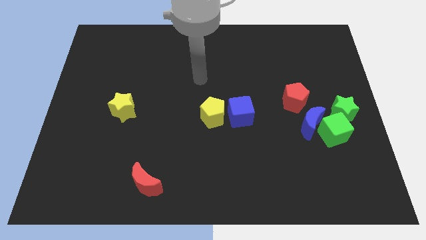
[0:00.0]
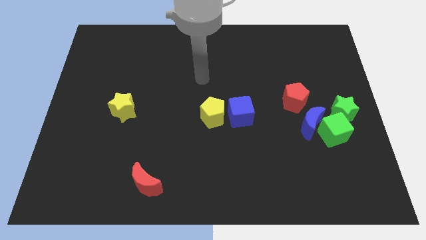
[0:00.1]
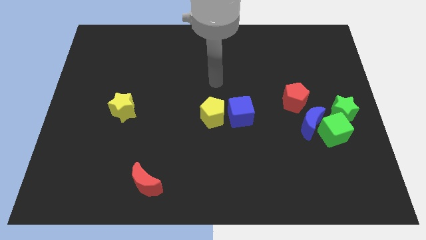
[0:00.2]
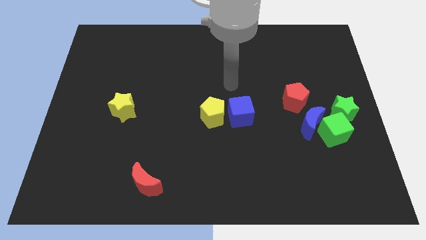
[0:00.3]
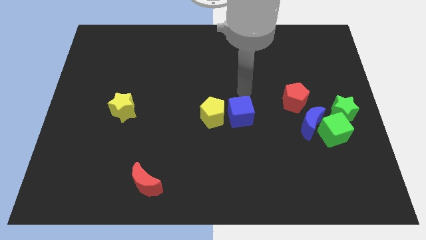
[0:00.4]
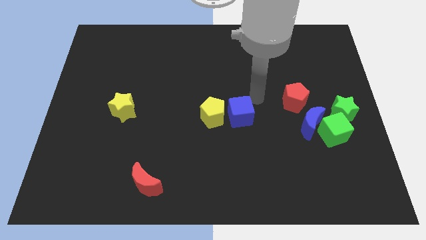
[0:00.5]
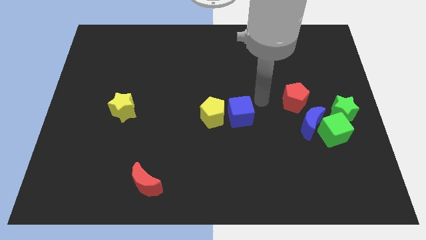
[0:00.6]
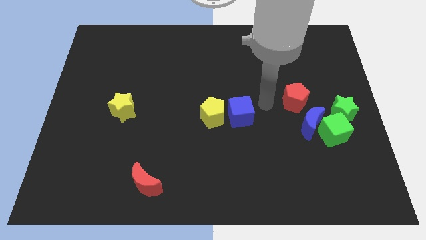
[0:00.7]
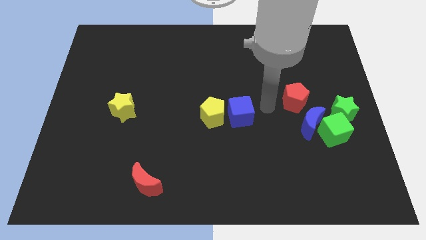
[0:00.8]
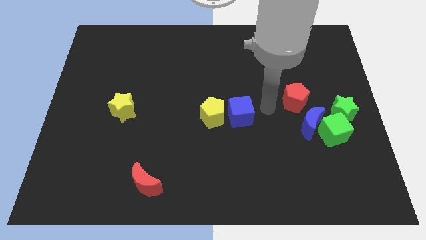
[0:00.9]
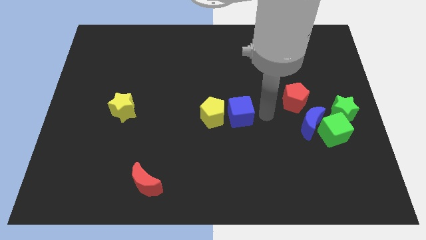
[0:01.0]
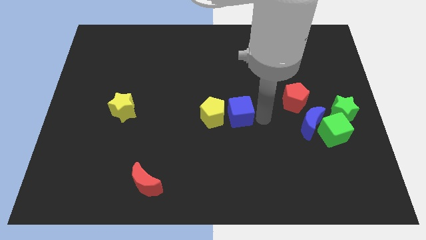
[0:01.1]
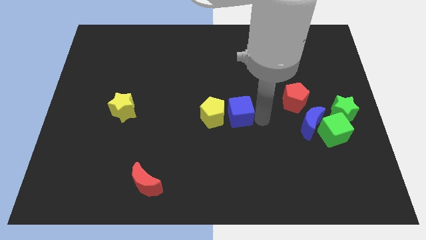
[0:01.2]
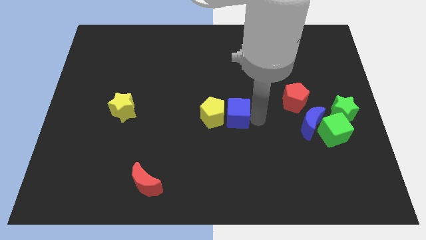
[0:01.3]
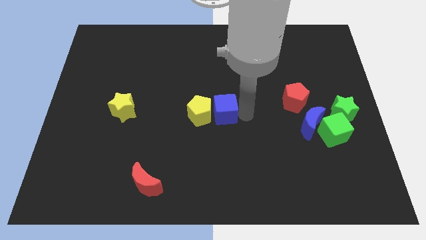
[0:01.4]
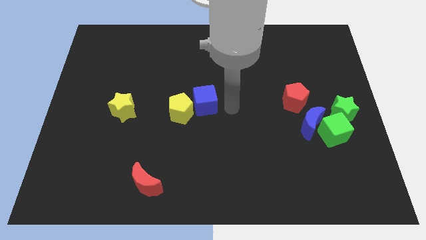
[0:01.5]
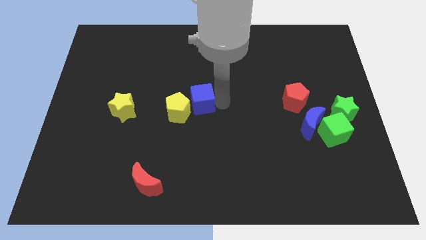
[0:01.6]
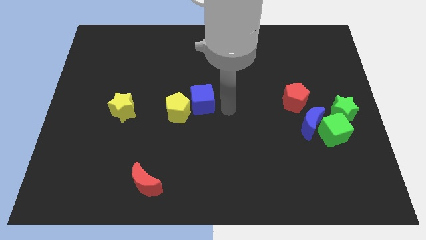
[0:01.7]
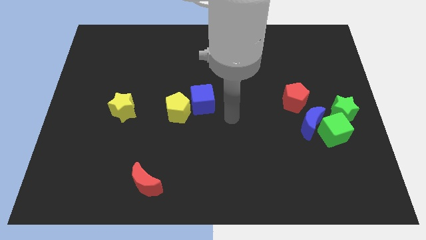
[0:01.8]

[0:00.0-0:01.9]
push the blue cube with yellow penatgon to the left

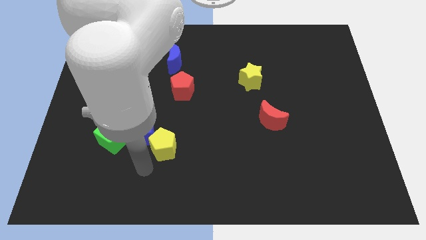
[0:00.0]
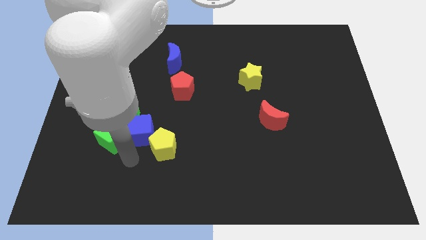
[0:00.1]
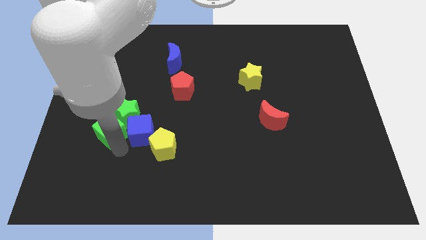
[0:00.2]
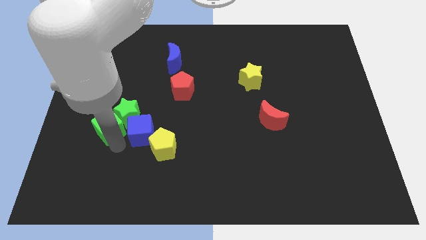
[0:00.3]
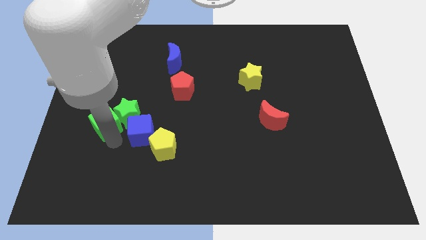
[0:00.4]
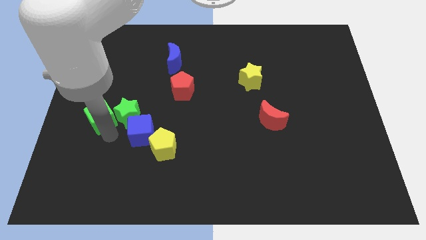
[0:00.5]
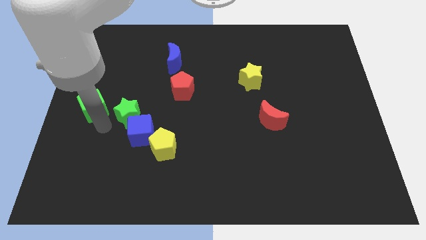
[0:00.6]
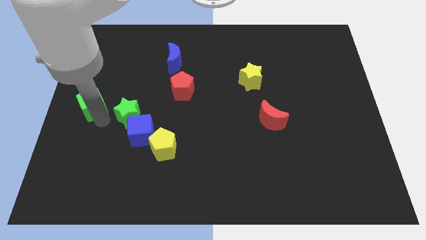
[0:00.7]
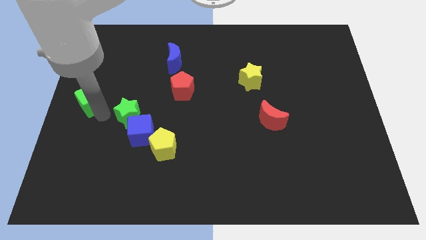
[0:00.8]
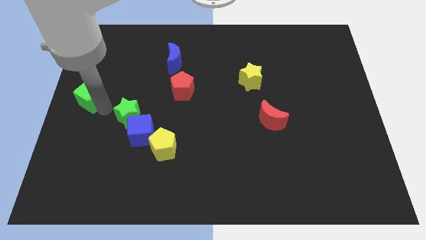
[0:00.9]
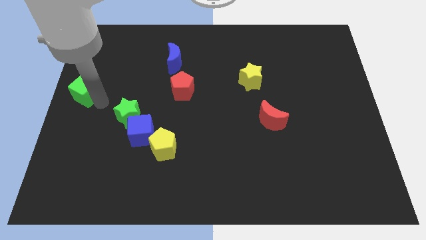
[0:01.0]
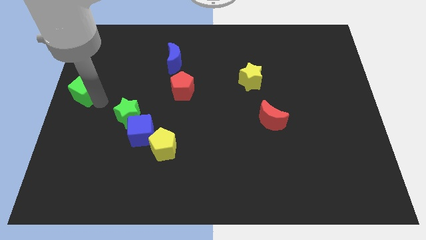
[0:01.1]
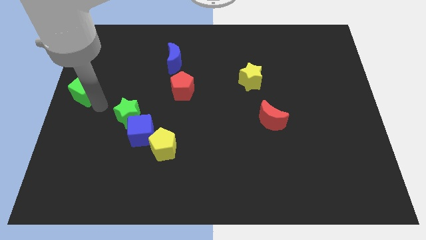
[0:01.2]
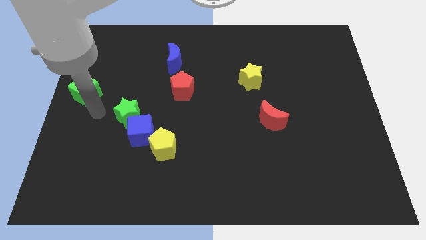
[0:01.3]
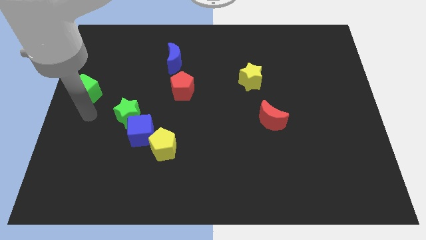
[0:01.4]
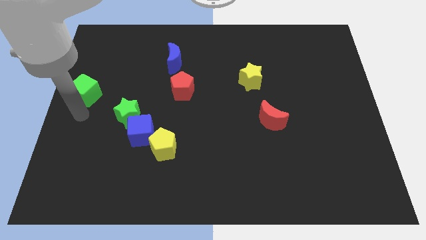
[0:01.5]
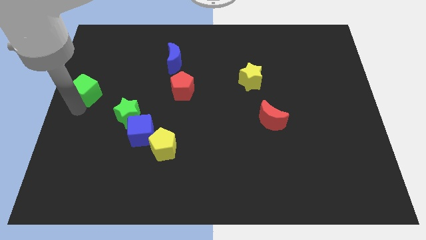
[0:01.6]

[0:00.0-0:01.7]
separate green cube from green star

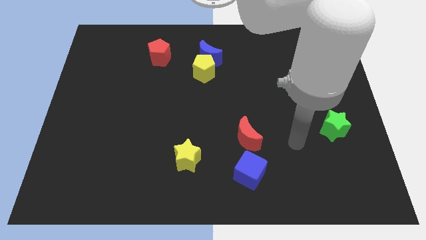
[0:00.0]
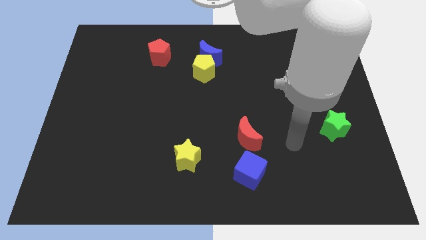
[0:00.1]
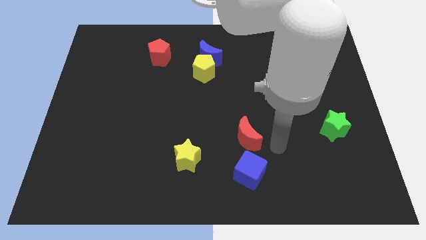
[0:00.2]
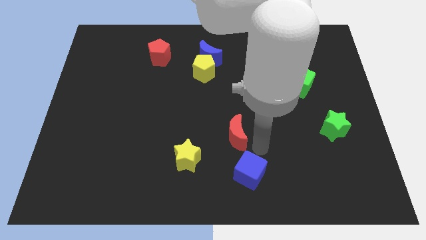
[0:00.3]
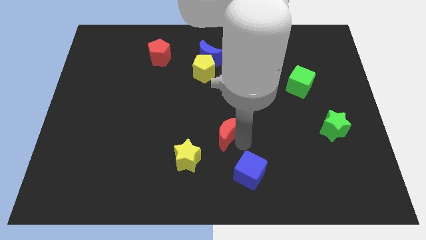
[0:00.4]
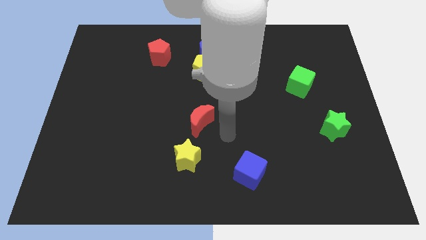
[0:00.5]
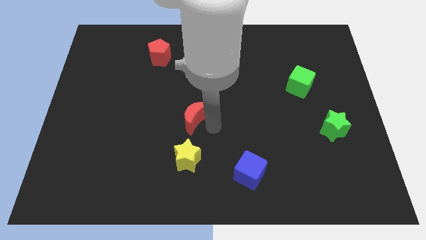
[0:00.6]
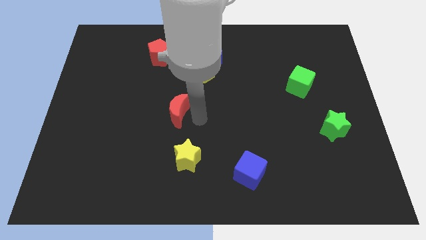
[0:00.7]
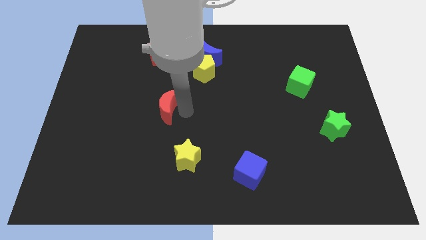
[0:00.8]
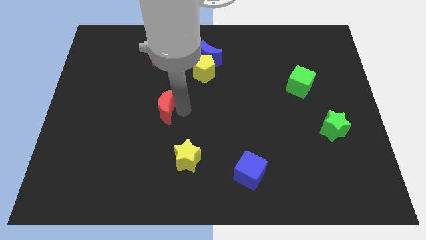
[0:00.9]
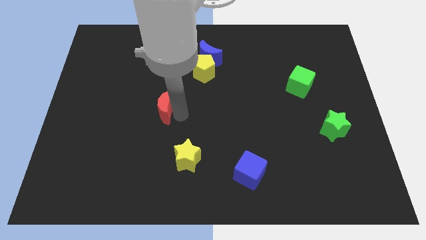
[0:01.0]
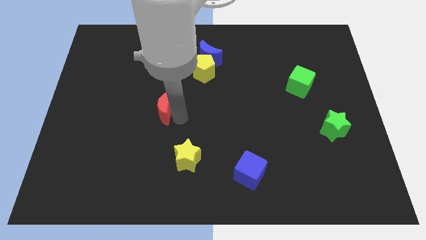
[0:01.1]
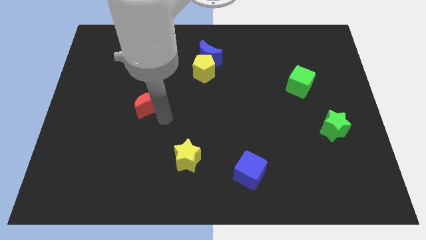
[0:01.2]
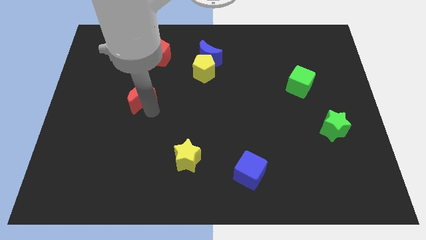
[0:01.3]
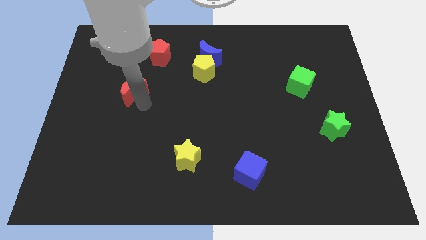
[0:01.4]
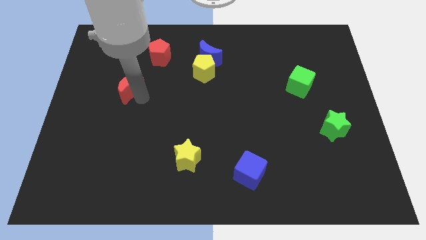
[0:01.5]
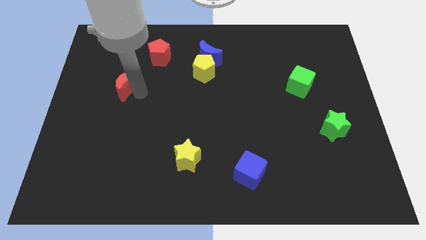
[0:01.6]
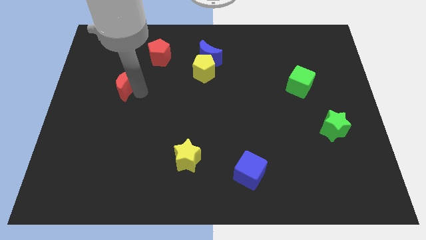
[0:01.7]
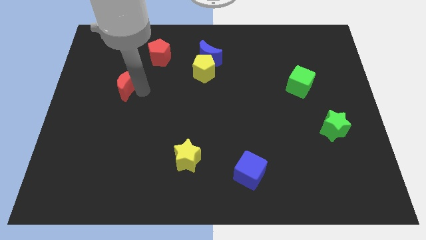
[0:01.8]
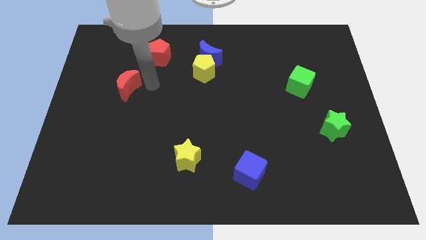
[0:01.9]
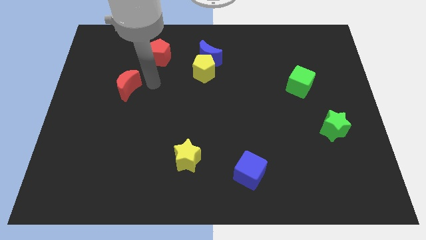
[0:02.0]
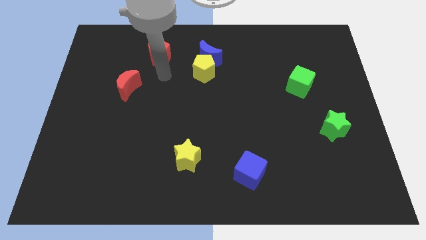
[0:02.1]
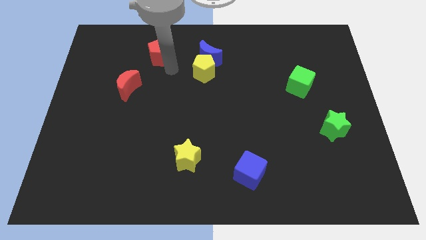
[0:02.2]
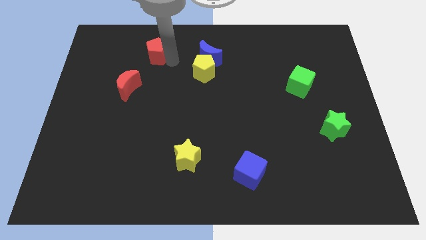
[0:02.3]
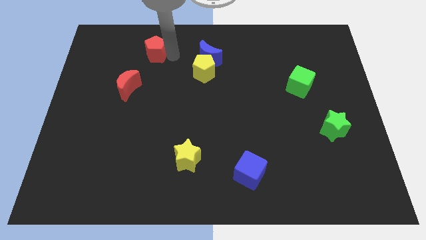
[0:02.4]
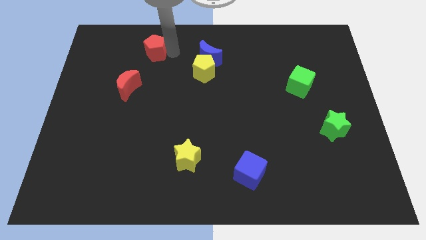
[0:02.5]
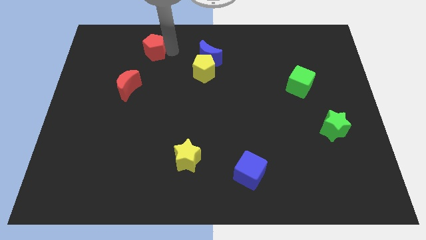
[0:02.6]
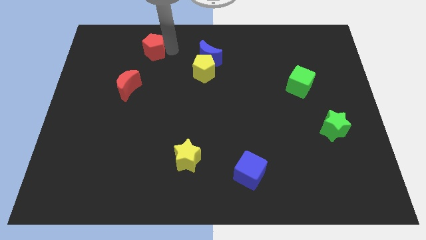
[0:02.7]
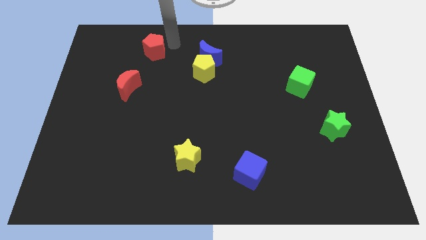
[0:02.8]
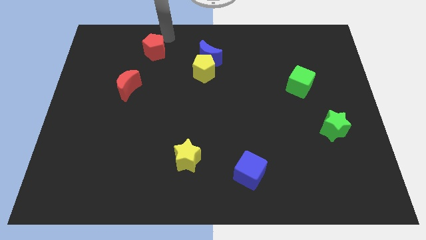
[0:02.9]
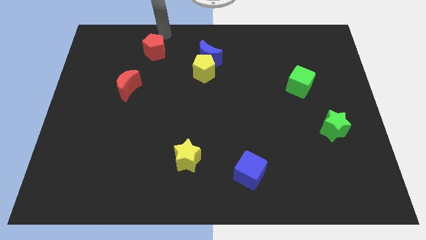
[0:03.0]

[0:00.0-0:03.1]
push the red crescent diagonally to the bottom left side of the red pentagon

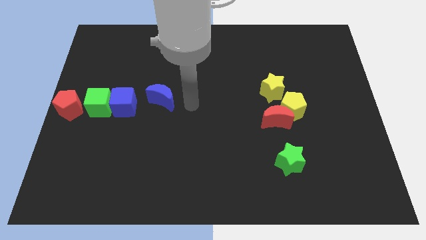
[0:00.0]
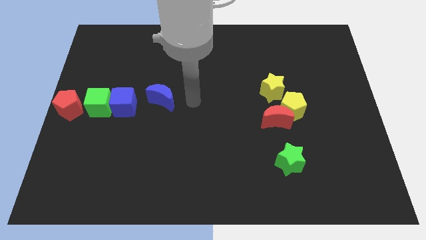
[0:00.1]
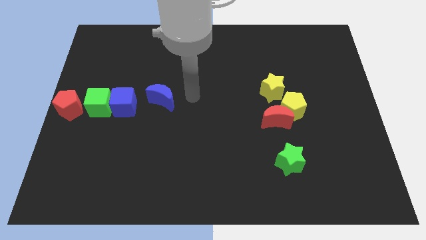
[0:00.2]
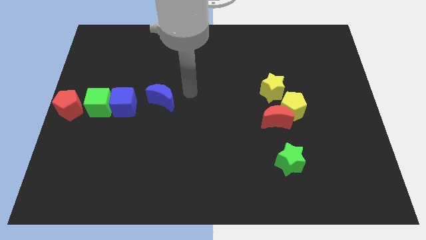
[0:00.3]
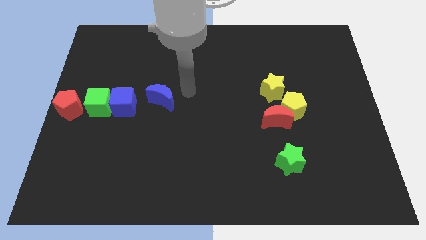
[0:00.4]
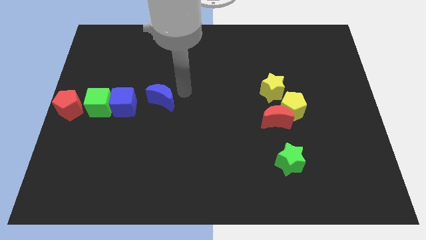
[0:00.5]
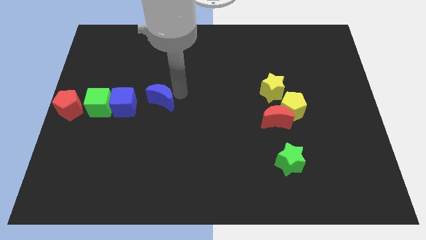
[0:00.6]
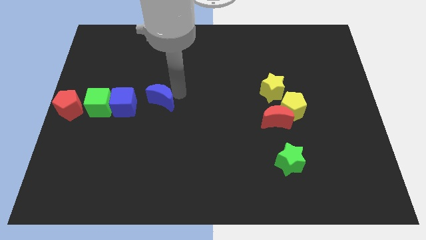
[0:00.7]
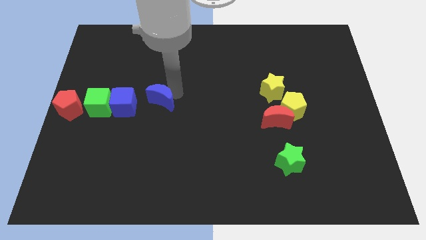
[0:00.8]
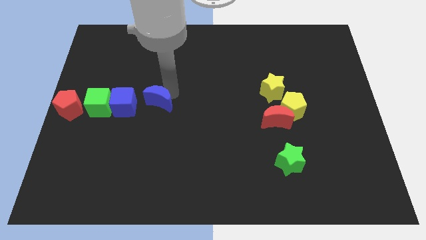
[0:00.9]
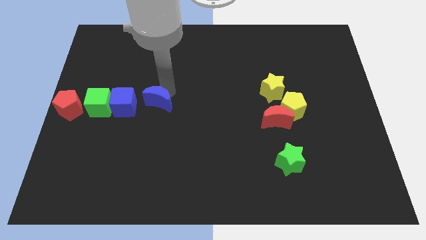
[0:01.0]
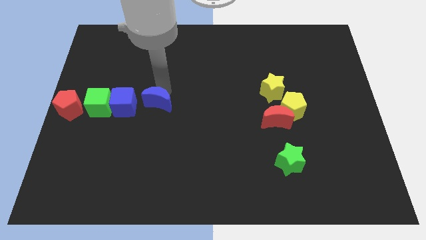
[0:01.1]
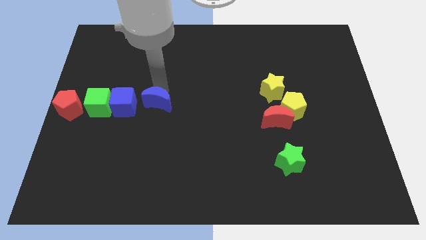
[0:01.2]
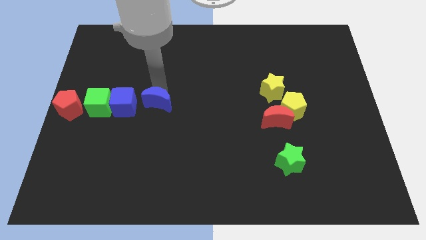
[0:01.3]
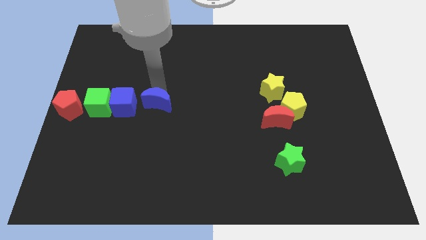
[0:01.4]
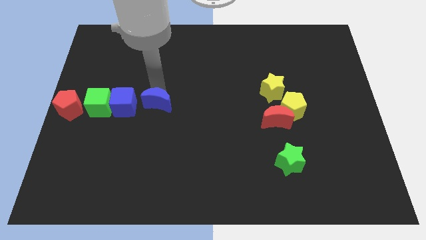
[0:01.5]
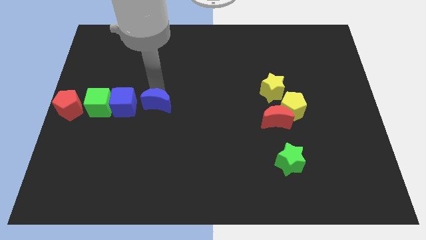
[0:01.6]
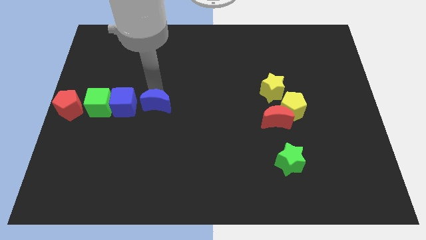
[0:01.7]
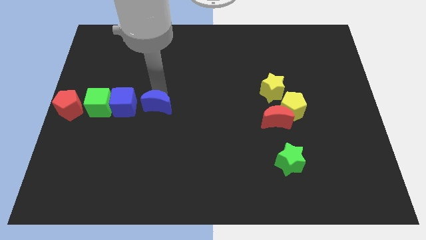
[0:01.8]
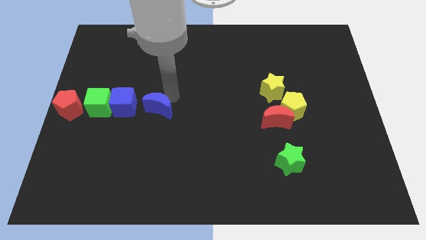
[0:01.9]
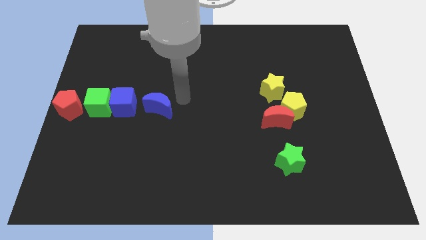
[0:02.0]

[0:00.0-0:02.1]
slide blue moon to the right of blue cube
